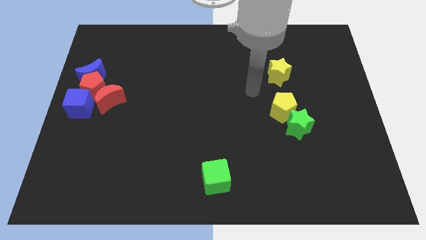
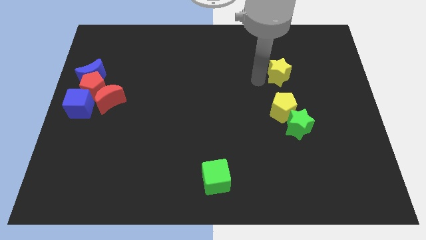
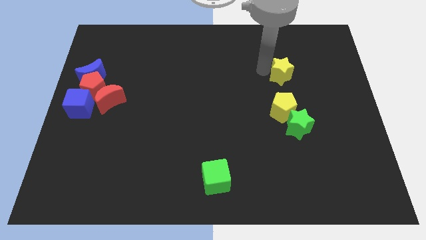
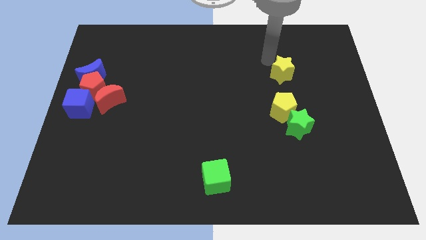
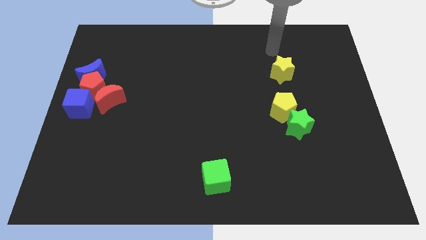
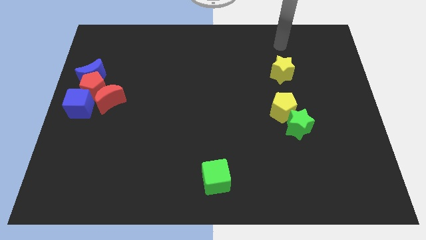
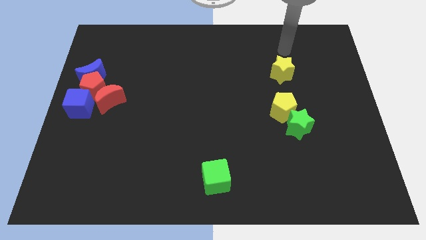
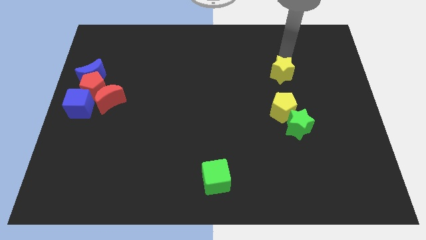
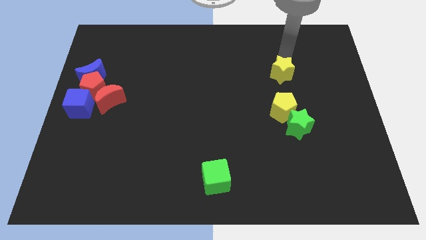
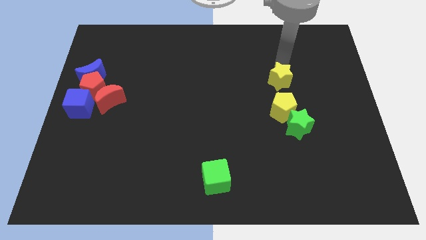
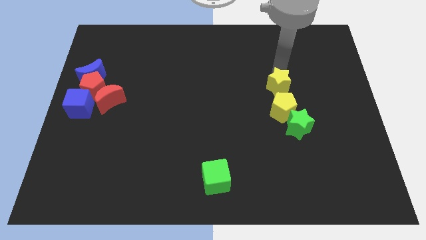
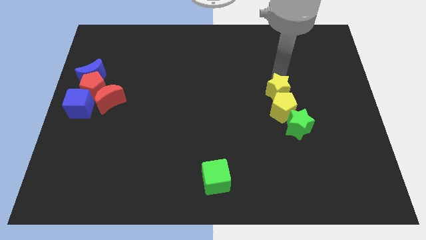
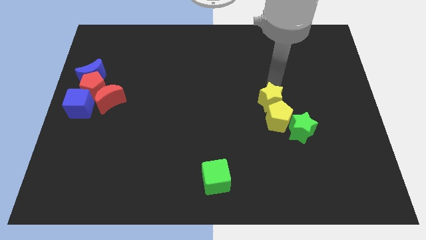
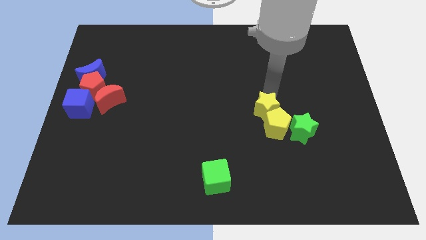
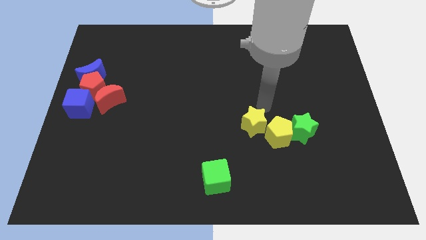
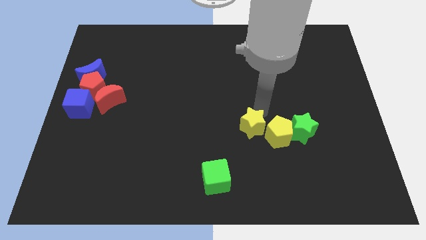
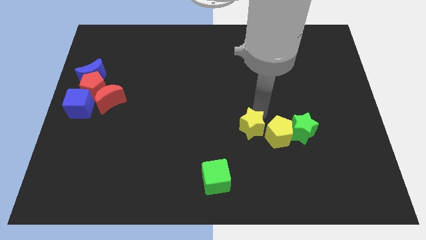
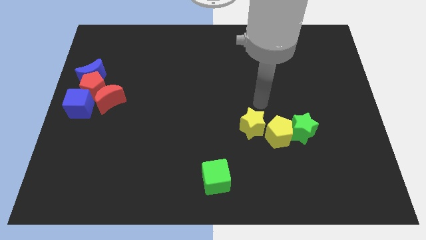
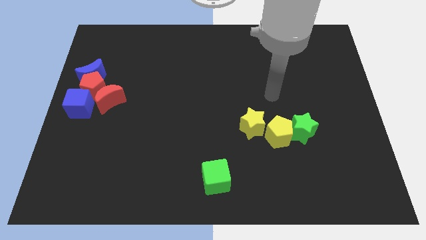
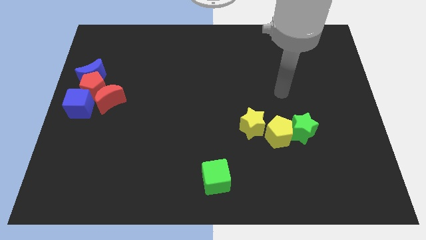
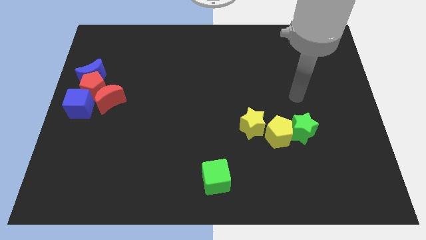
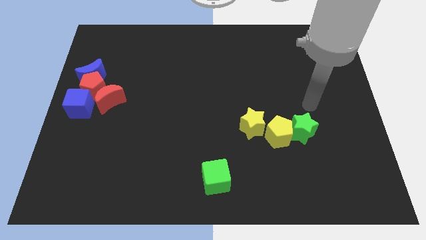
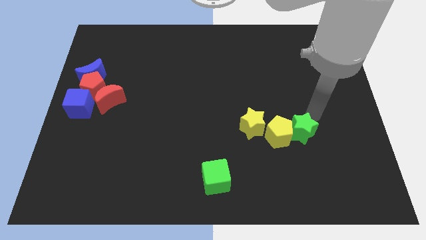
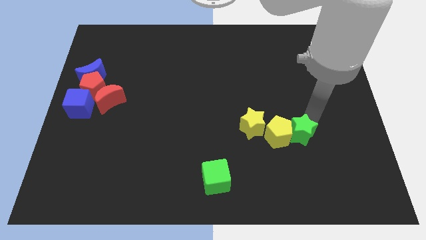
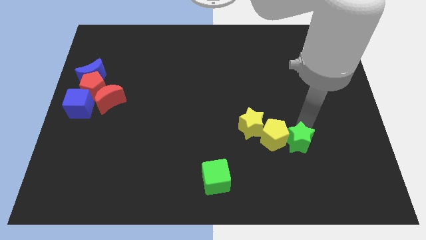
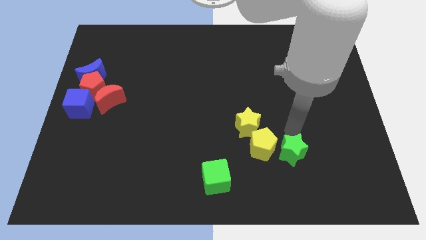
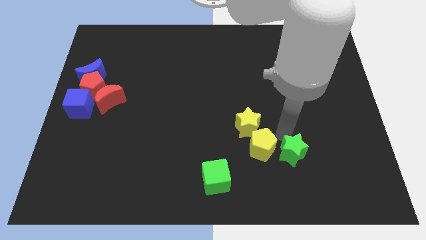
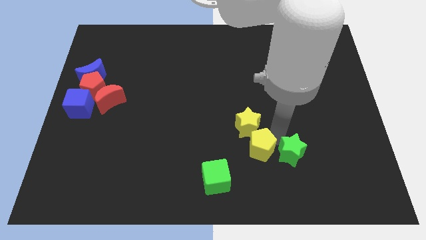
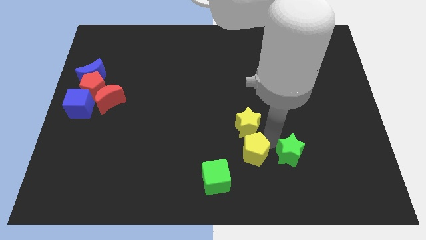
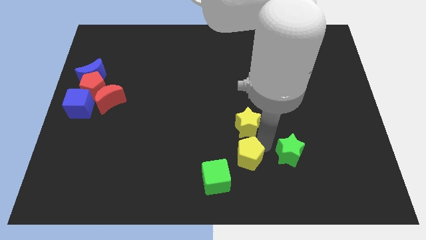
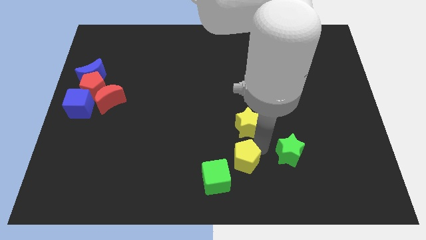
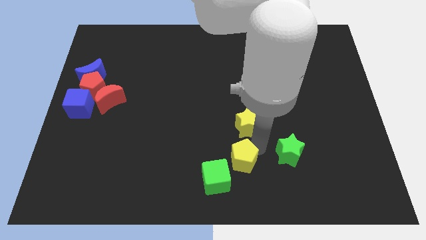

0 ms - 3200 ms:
push yellow star towards middle of the board

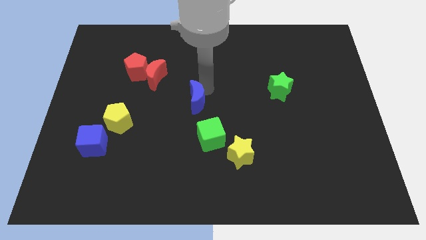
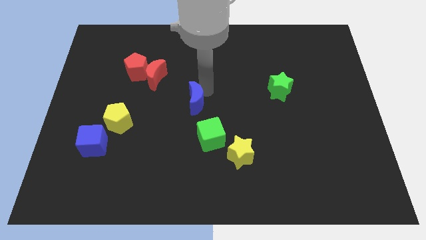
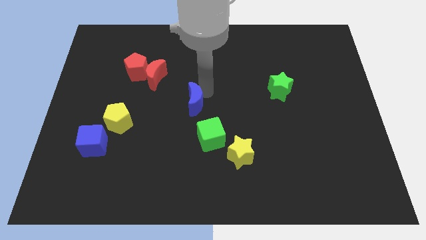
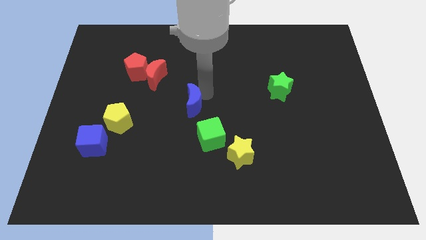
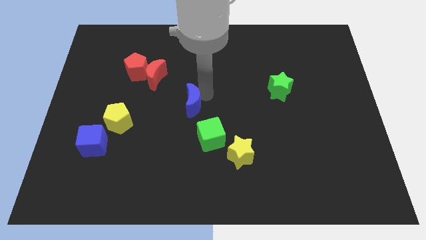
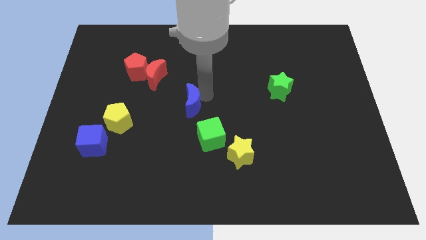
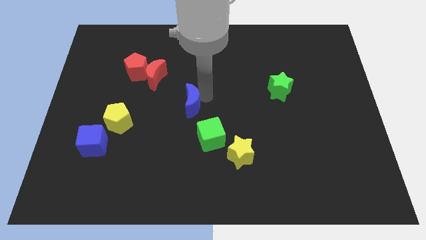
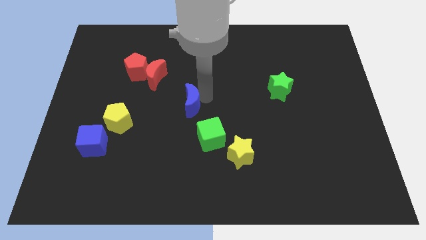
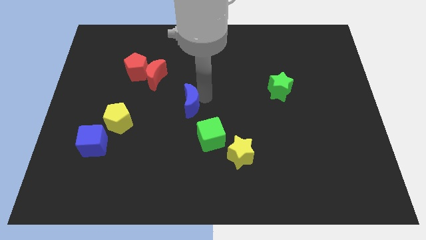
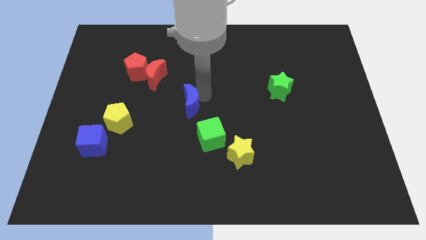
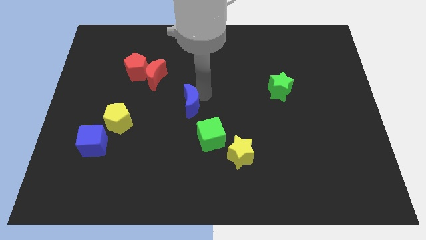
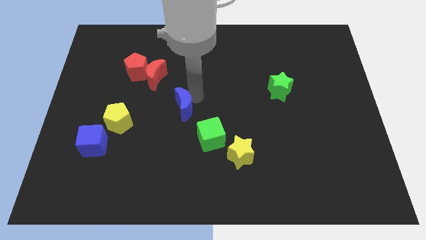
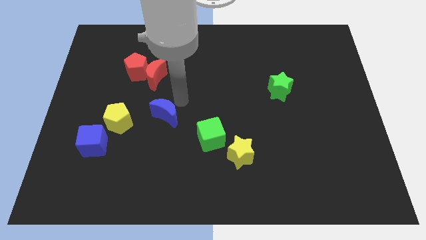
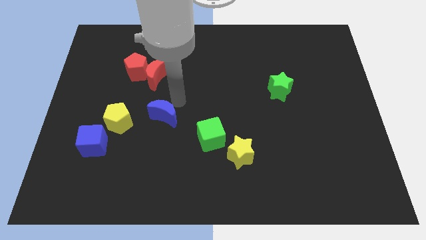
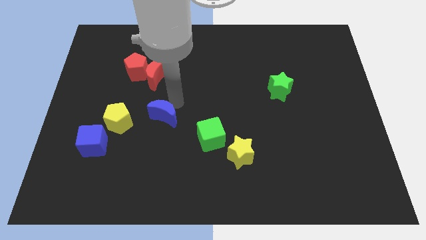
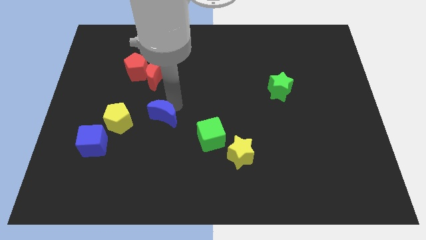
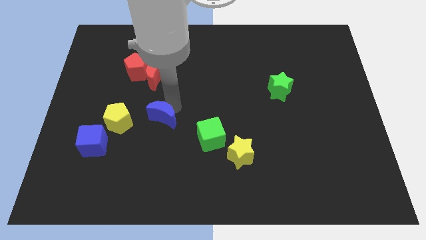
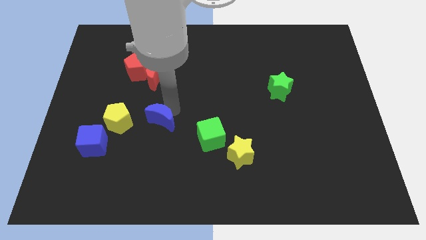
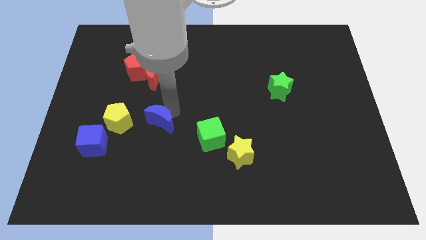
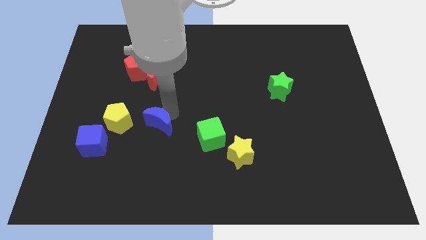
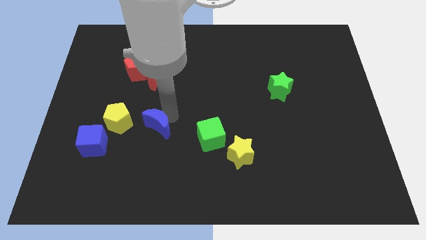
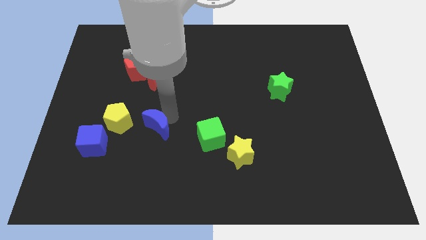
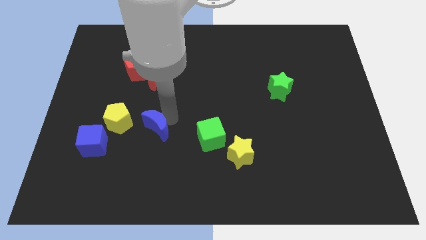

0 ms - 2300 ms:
move the blue crescent to the right of the yellow pentagon

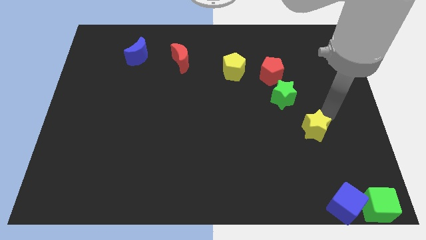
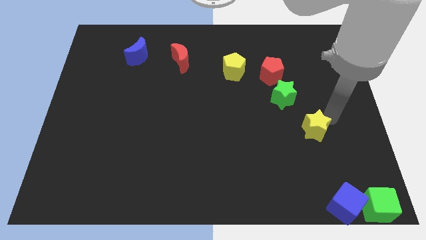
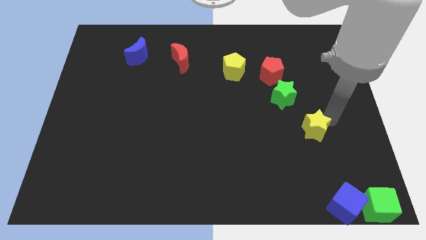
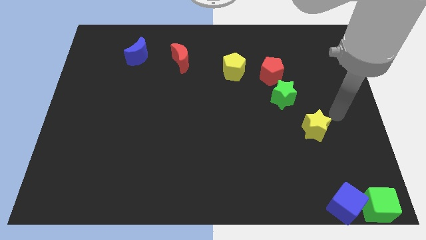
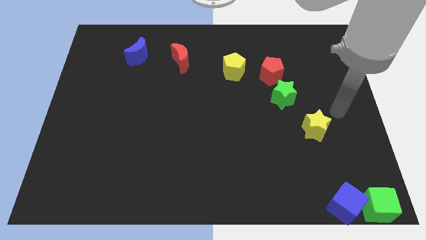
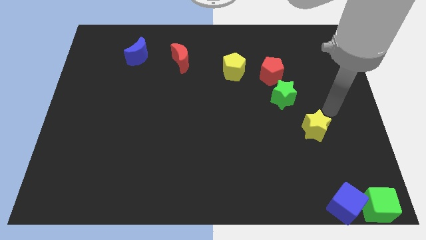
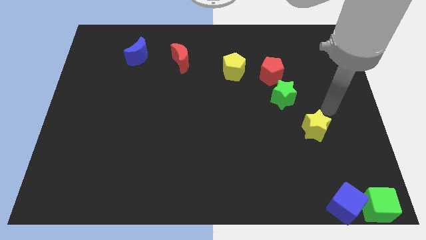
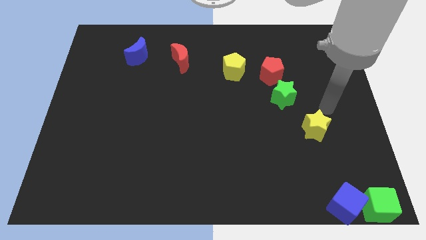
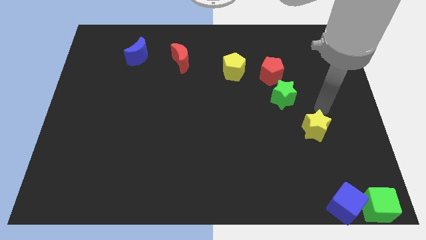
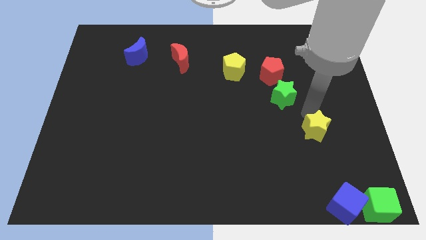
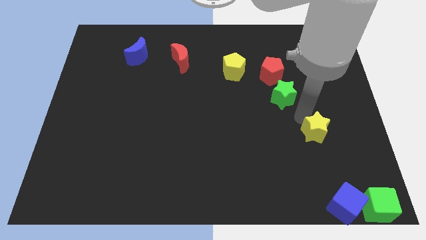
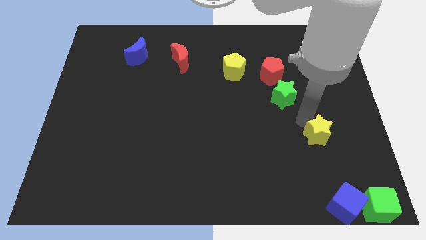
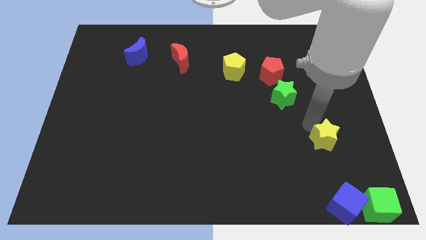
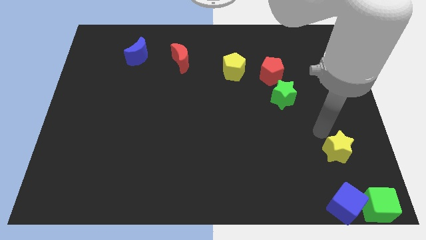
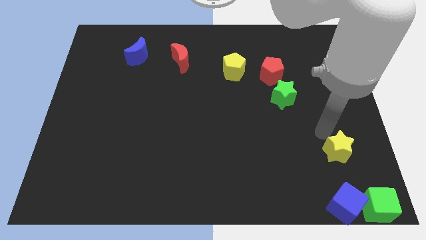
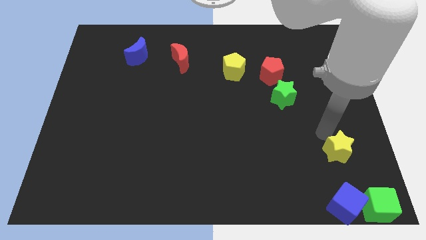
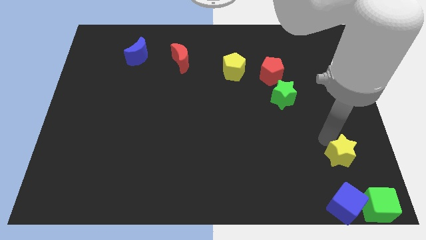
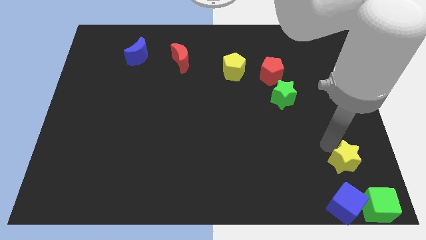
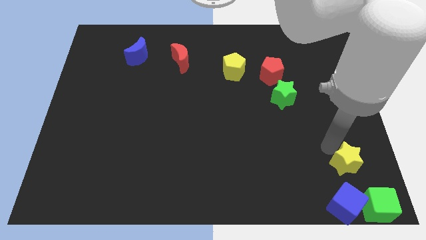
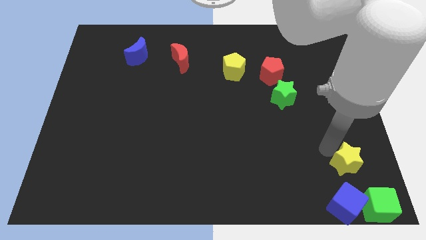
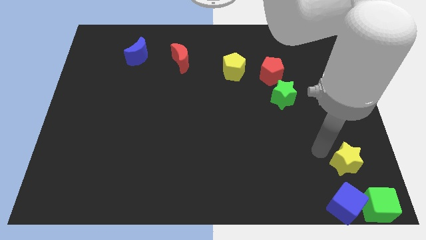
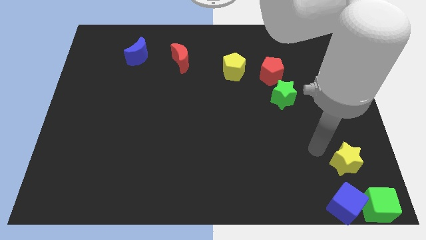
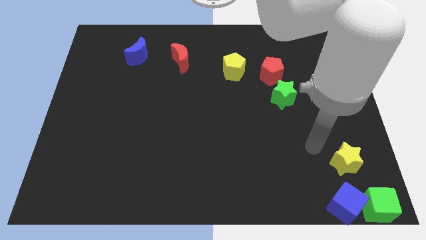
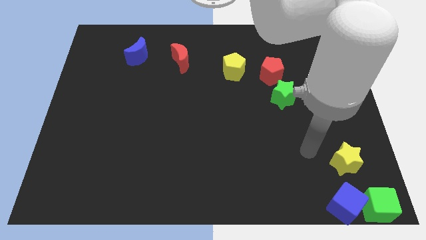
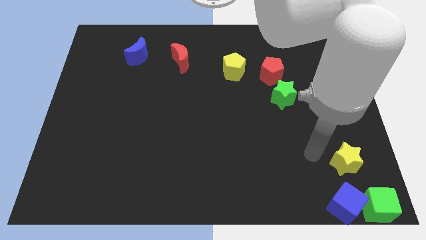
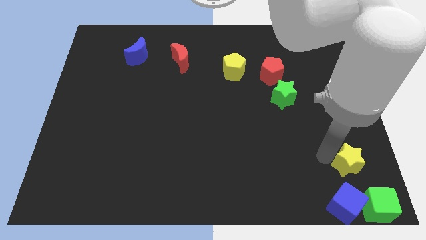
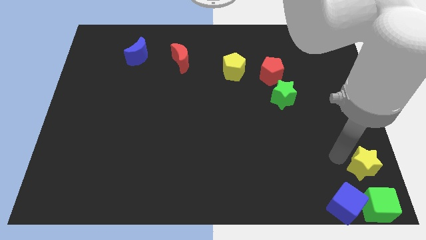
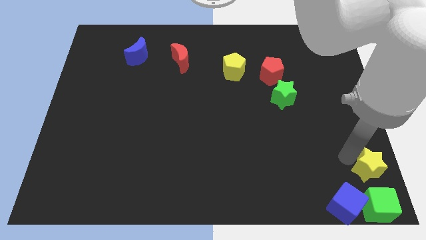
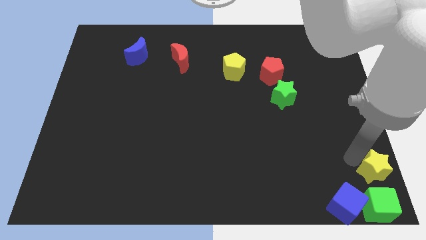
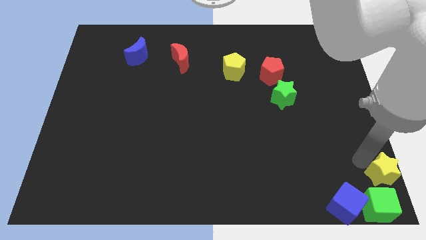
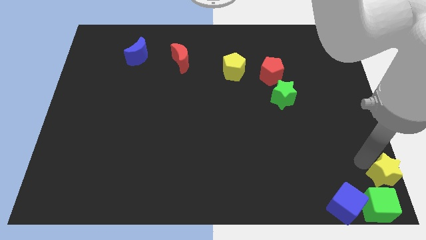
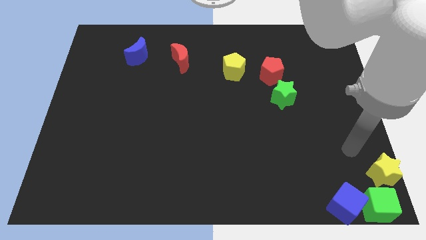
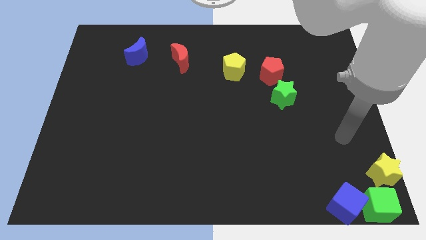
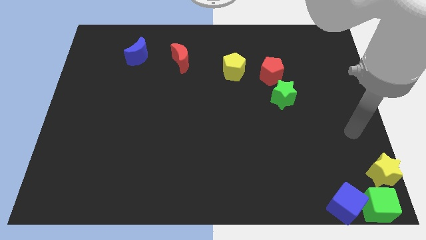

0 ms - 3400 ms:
place the yellow star at the top side of the green cube

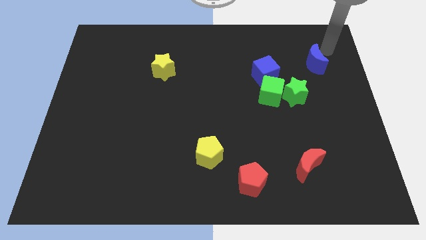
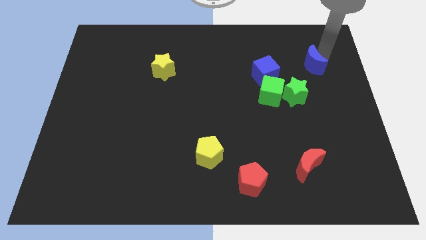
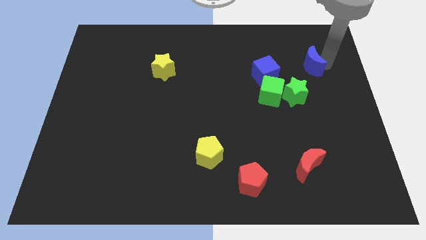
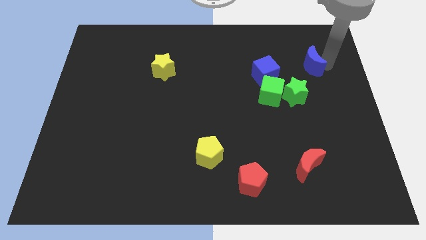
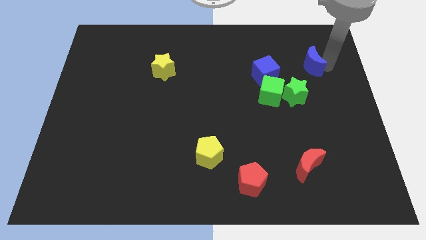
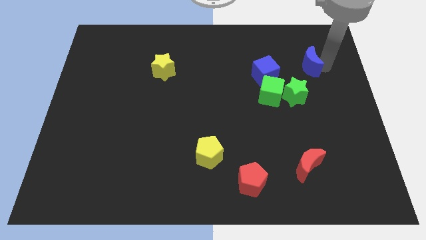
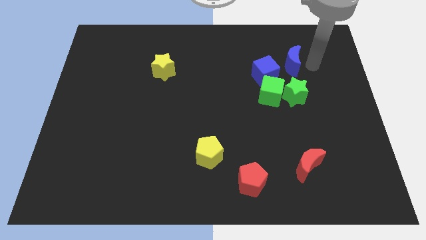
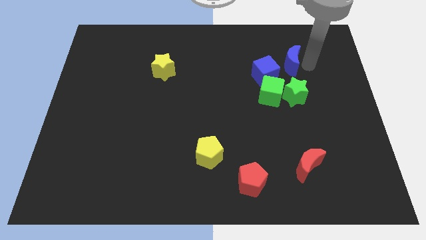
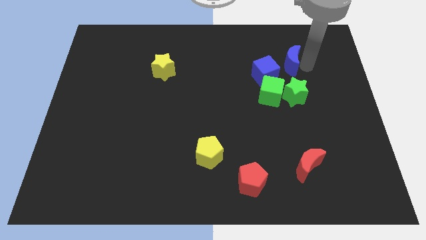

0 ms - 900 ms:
push blue crescent above green star
